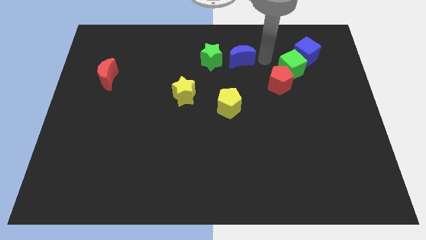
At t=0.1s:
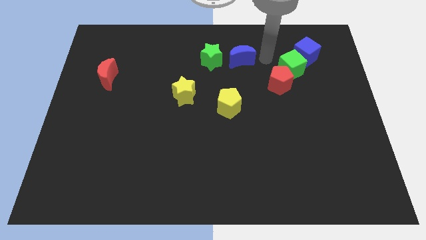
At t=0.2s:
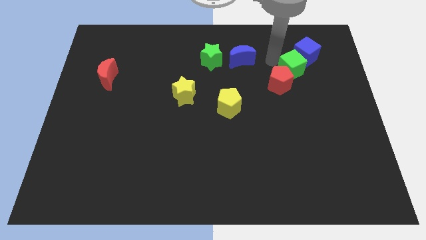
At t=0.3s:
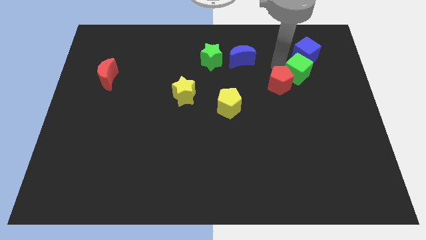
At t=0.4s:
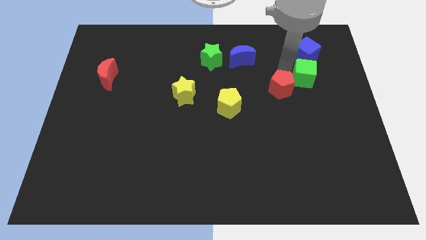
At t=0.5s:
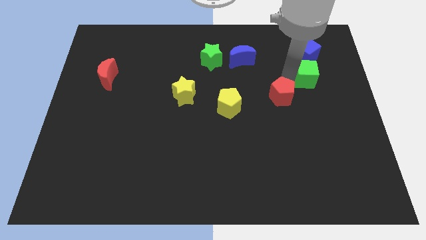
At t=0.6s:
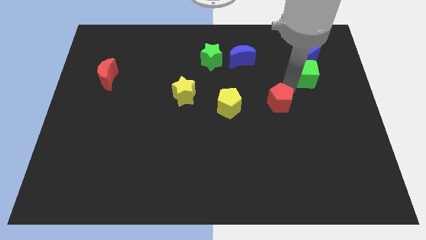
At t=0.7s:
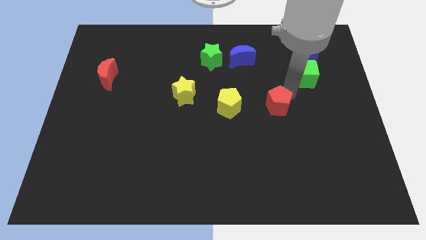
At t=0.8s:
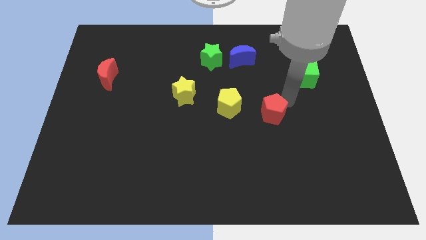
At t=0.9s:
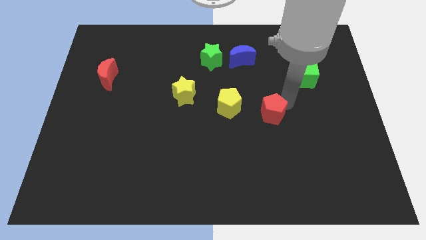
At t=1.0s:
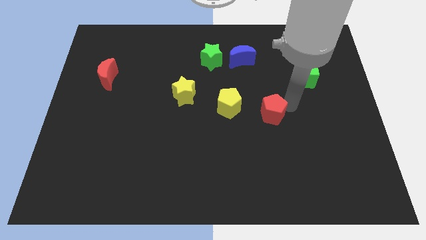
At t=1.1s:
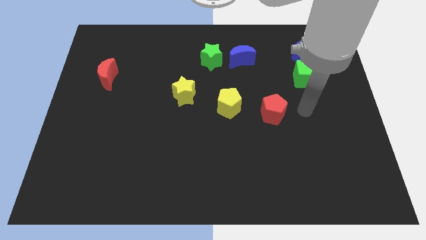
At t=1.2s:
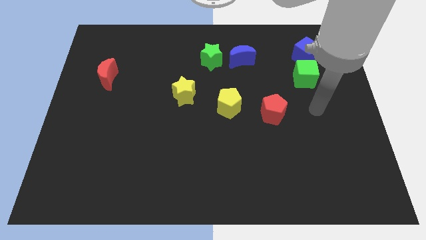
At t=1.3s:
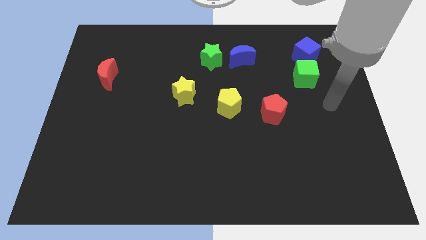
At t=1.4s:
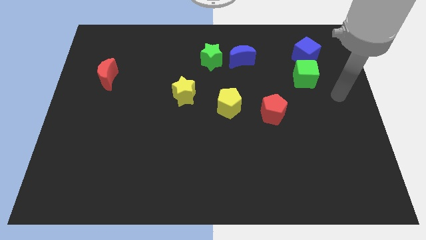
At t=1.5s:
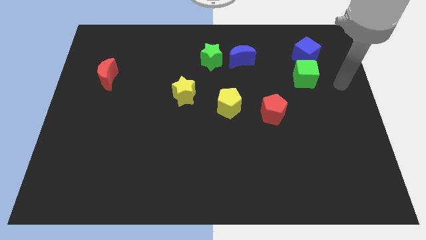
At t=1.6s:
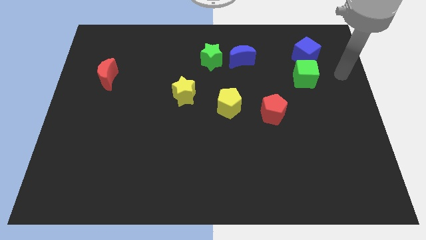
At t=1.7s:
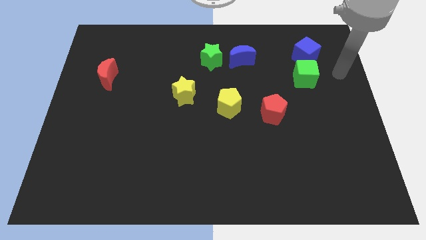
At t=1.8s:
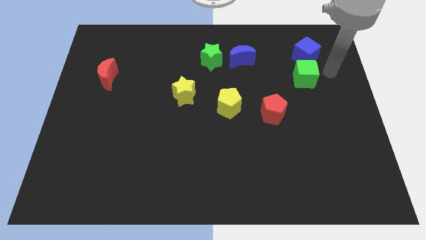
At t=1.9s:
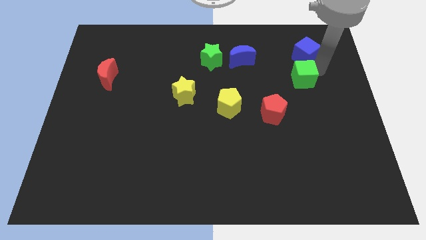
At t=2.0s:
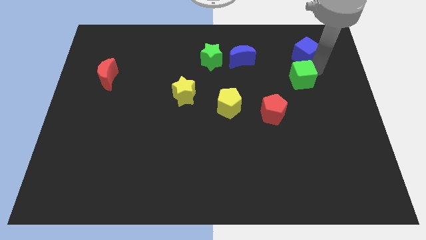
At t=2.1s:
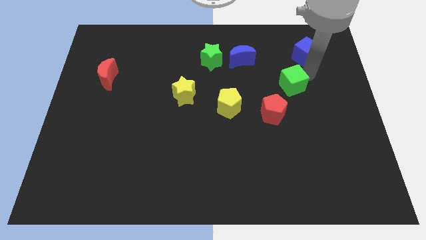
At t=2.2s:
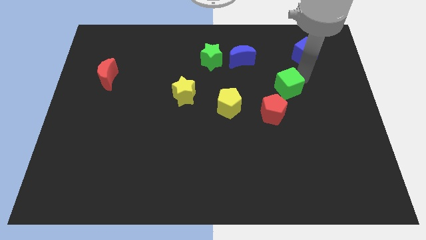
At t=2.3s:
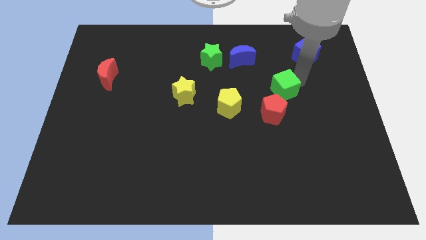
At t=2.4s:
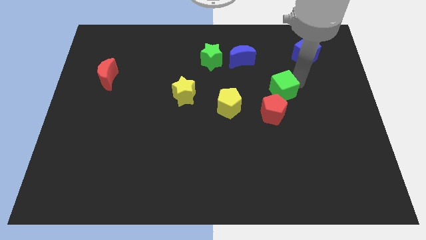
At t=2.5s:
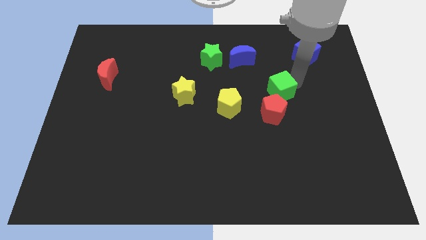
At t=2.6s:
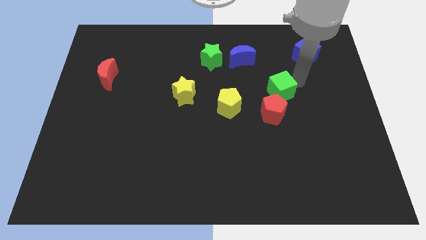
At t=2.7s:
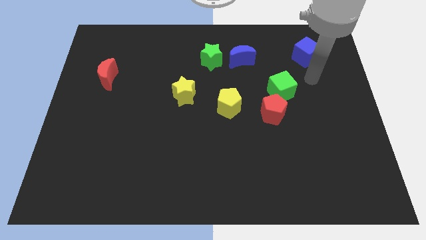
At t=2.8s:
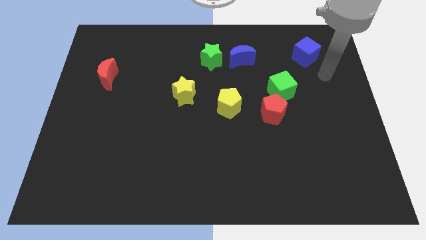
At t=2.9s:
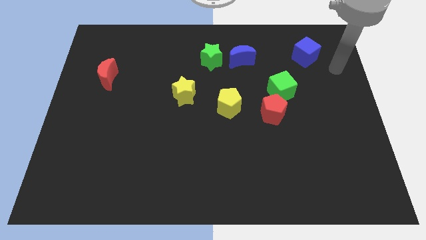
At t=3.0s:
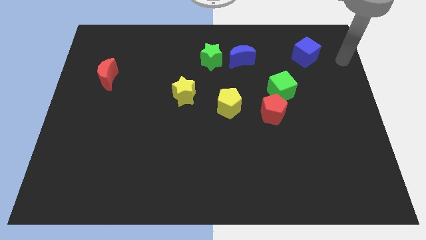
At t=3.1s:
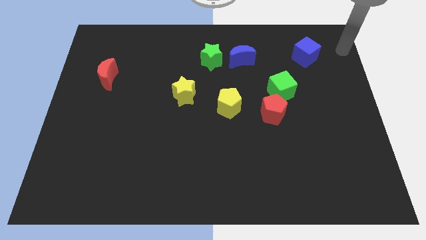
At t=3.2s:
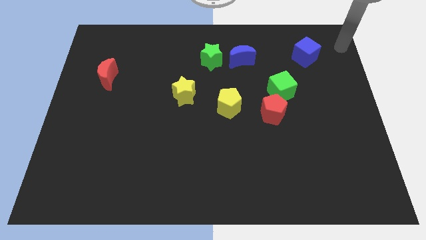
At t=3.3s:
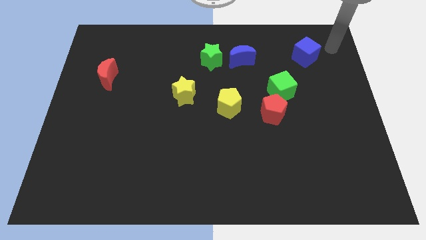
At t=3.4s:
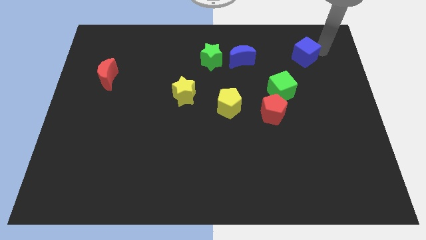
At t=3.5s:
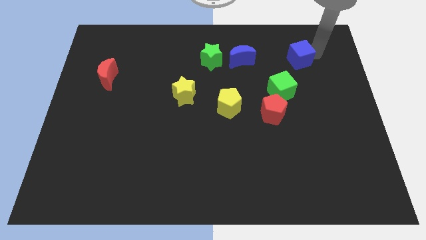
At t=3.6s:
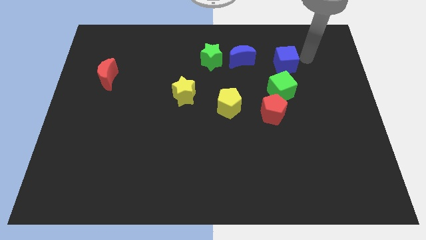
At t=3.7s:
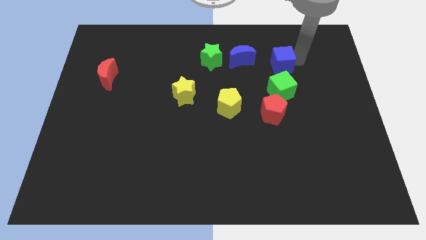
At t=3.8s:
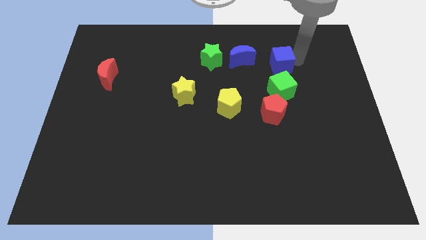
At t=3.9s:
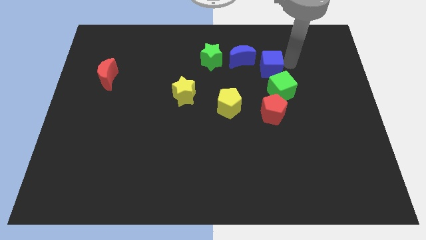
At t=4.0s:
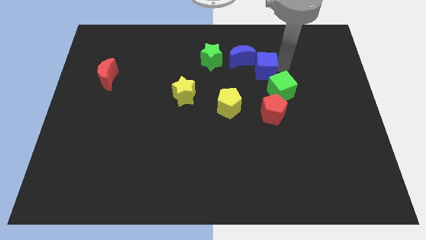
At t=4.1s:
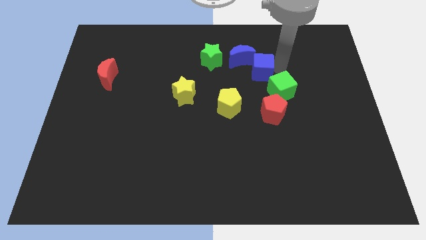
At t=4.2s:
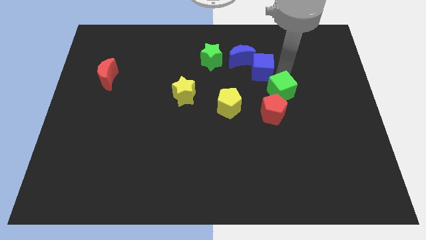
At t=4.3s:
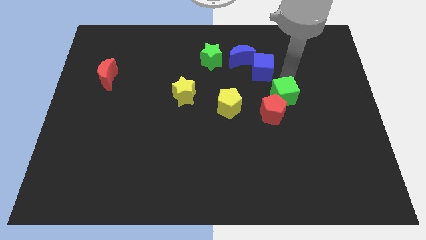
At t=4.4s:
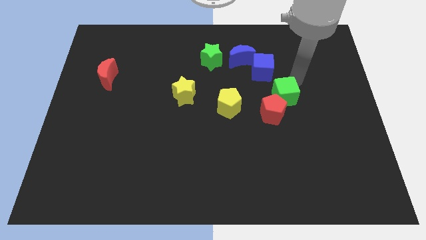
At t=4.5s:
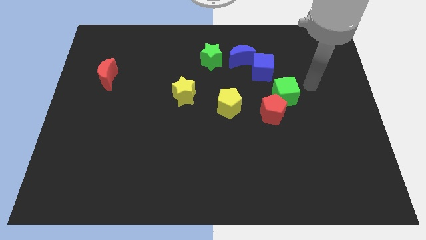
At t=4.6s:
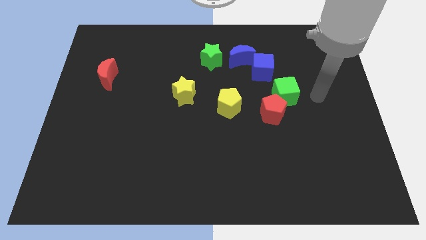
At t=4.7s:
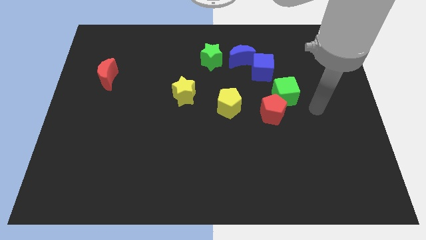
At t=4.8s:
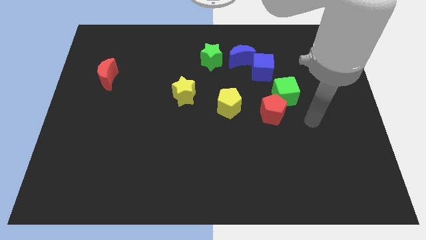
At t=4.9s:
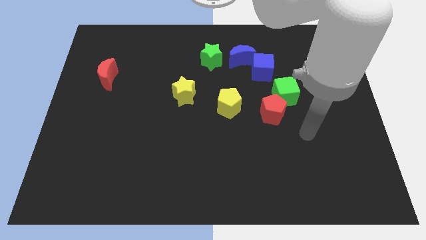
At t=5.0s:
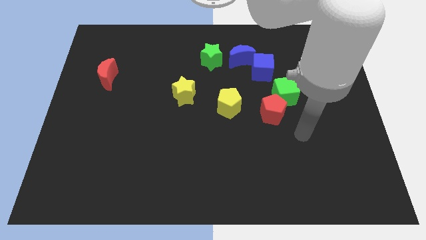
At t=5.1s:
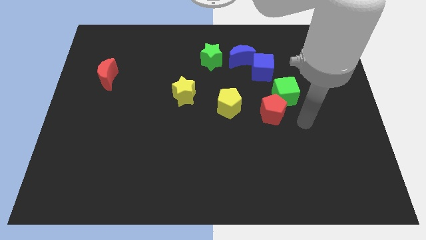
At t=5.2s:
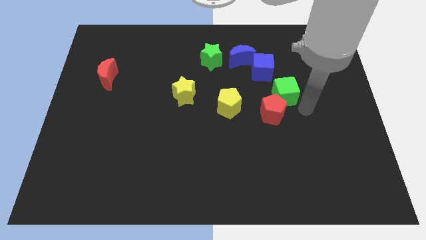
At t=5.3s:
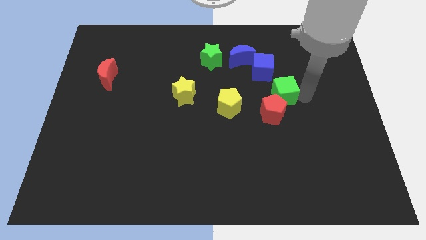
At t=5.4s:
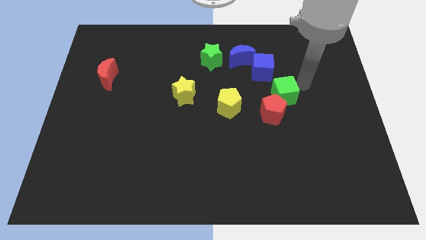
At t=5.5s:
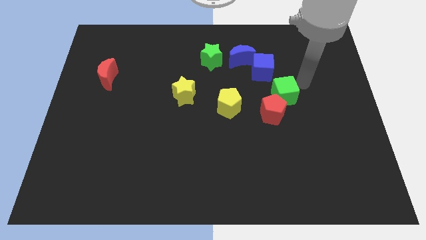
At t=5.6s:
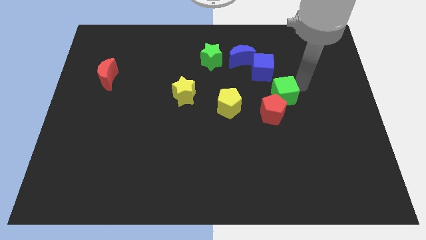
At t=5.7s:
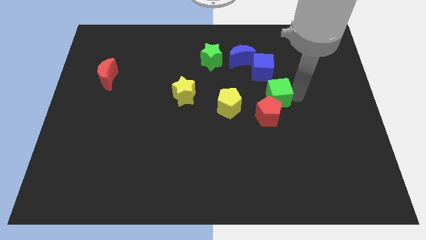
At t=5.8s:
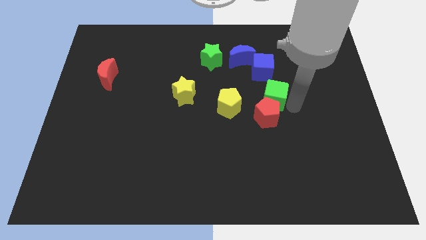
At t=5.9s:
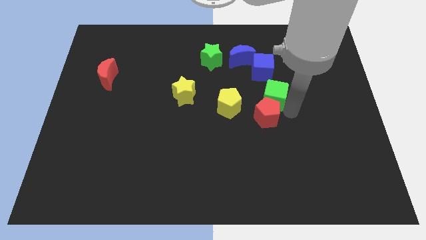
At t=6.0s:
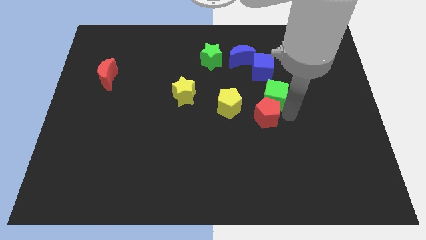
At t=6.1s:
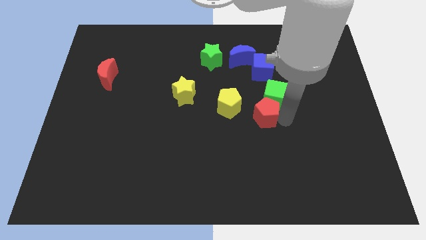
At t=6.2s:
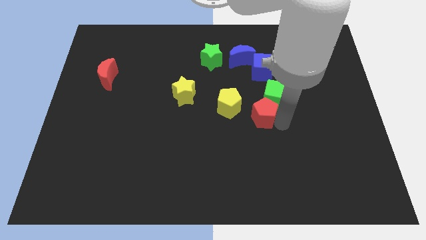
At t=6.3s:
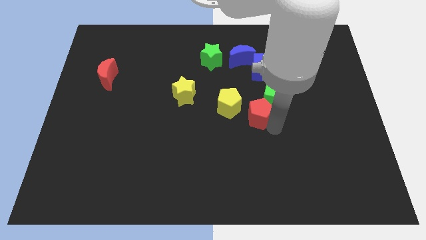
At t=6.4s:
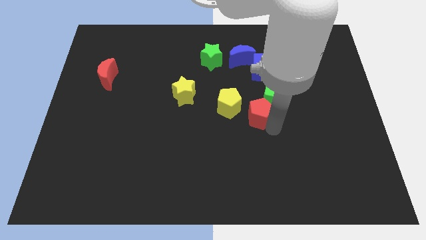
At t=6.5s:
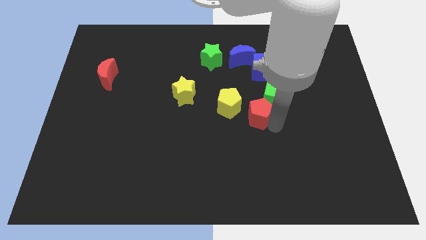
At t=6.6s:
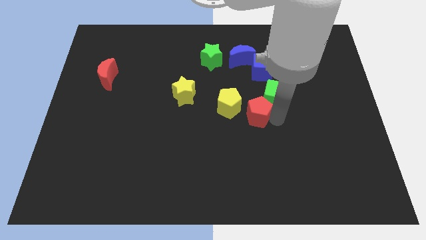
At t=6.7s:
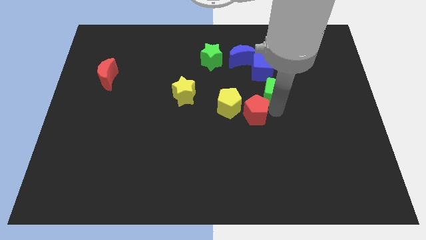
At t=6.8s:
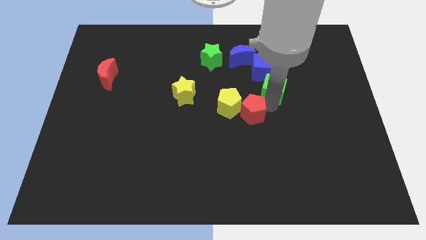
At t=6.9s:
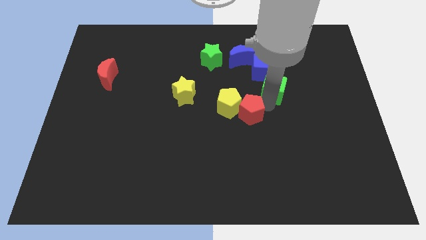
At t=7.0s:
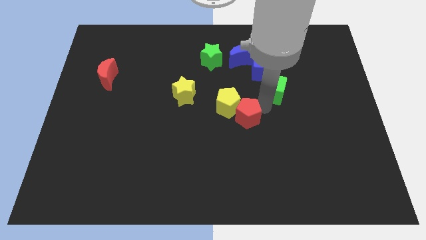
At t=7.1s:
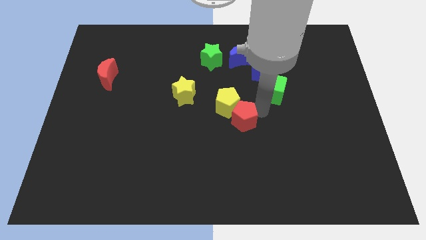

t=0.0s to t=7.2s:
seperate the diagonal line at the top center

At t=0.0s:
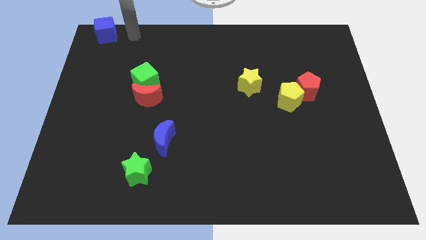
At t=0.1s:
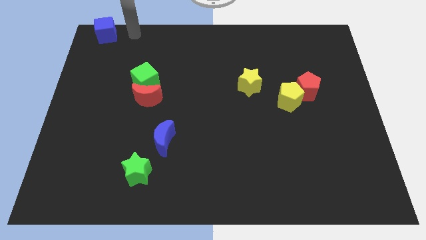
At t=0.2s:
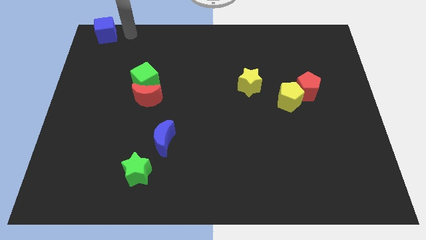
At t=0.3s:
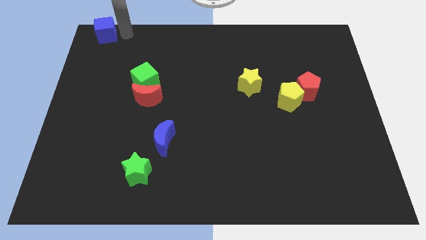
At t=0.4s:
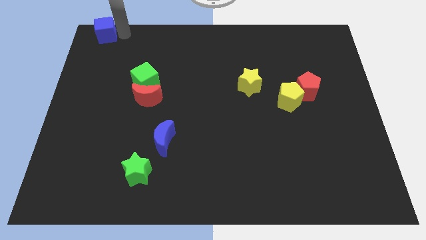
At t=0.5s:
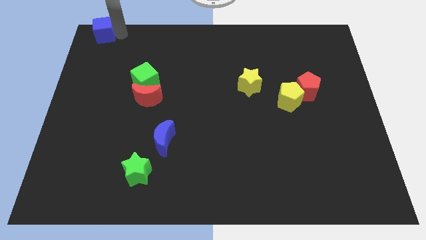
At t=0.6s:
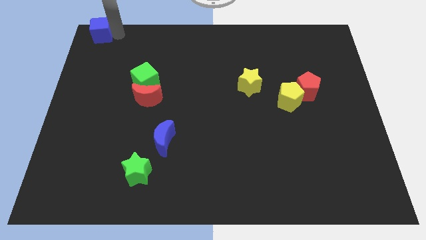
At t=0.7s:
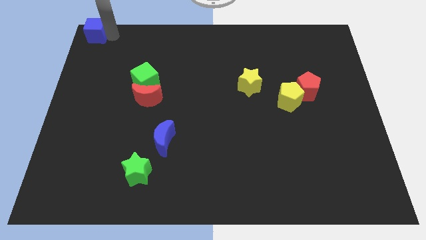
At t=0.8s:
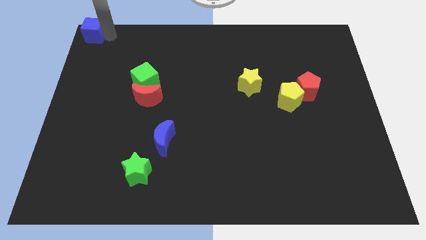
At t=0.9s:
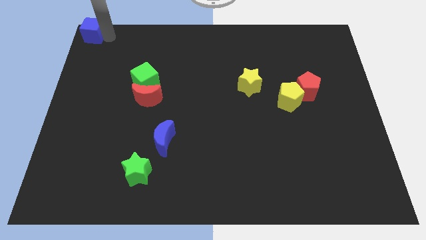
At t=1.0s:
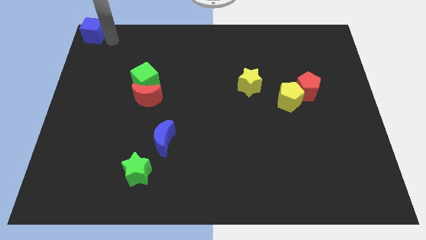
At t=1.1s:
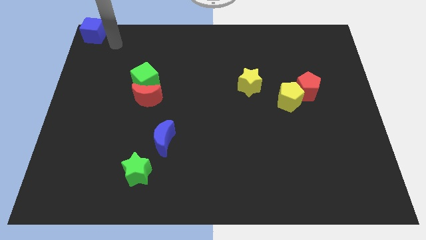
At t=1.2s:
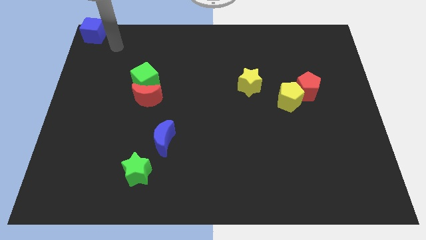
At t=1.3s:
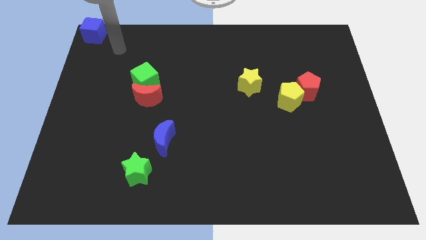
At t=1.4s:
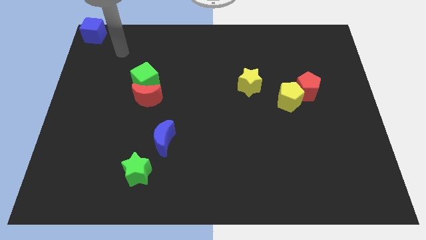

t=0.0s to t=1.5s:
place the blue cube at the top left corner of the board

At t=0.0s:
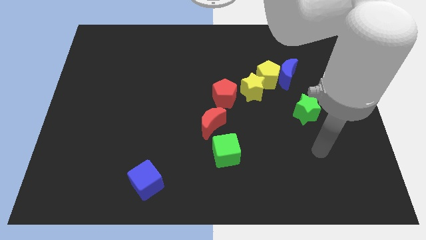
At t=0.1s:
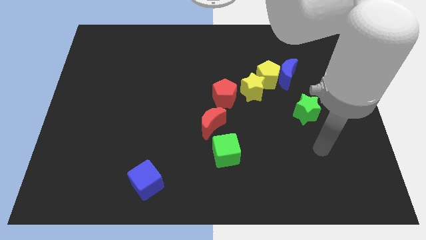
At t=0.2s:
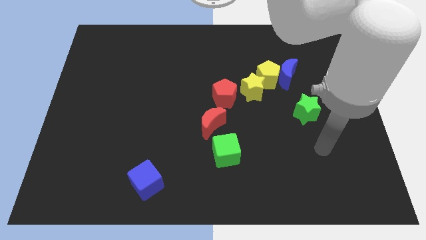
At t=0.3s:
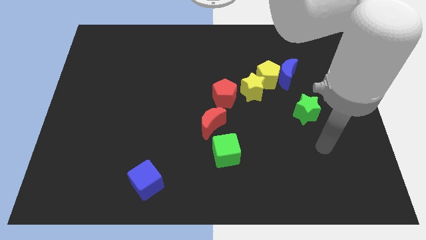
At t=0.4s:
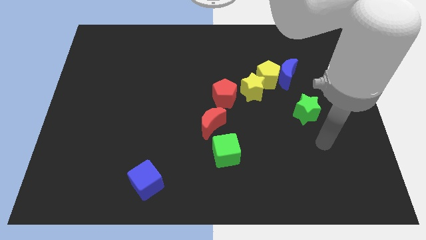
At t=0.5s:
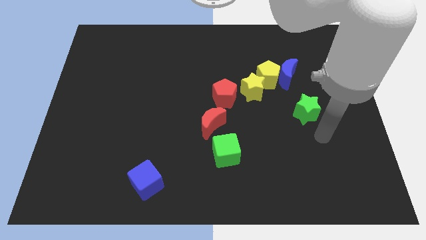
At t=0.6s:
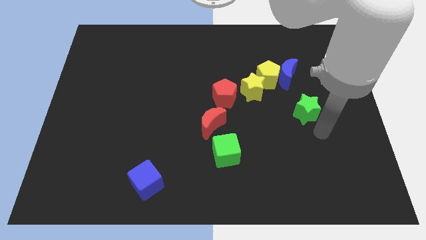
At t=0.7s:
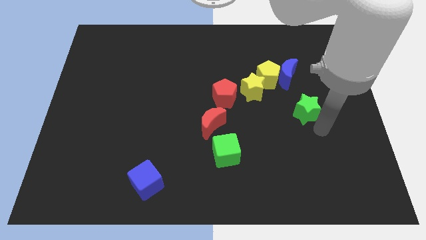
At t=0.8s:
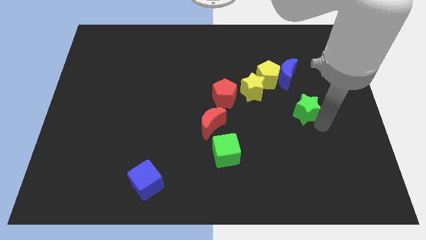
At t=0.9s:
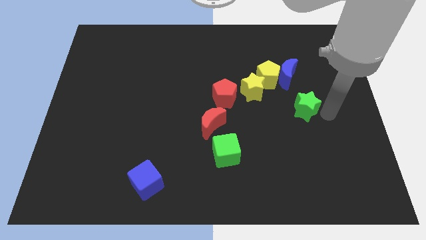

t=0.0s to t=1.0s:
touch the bottom of green star
